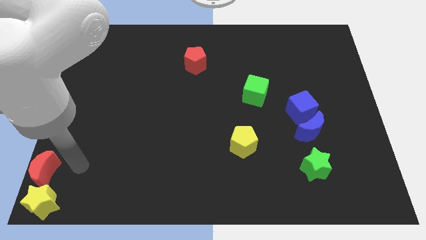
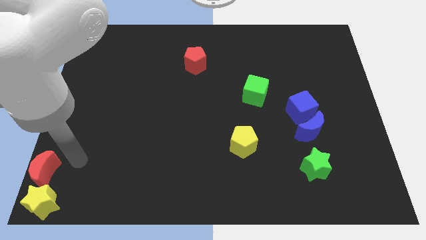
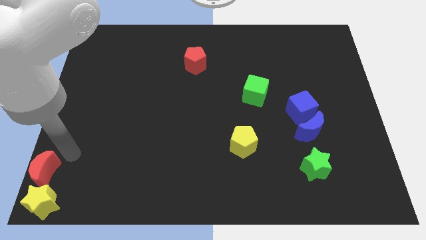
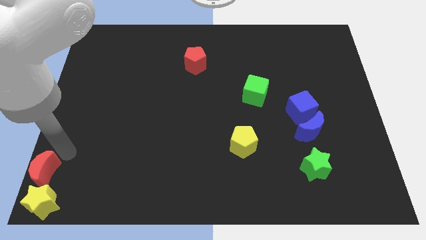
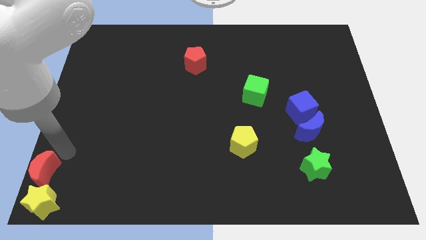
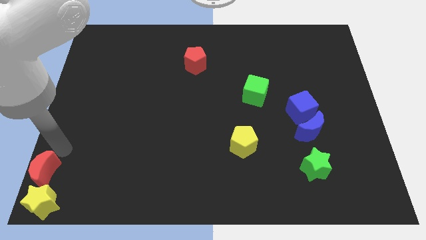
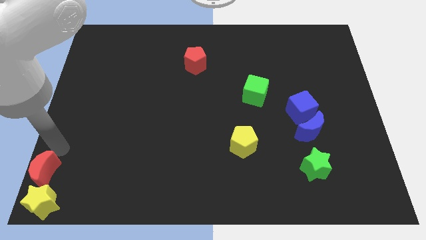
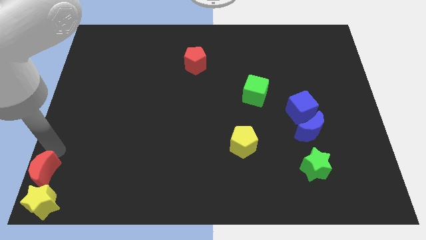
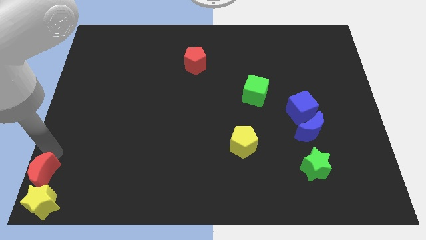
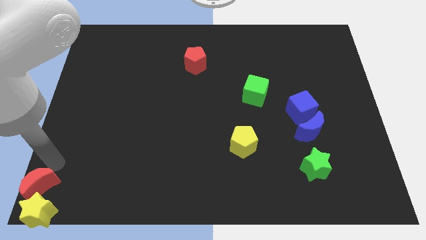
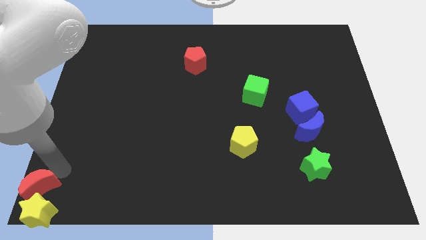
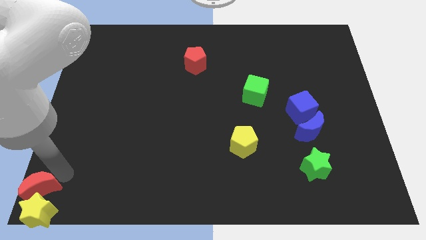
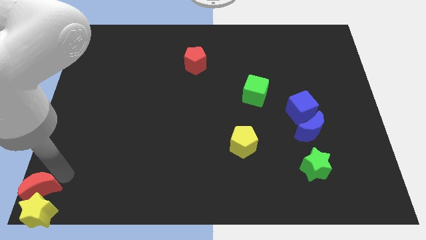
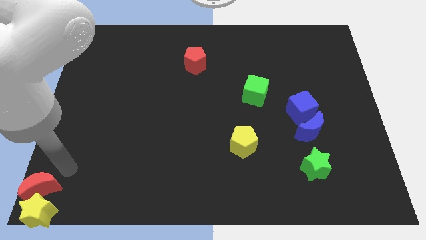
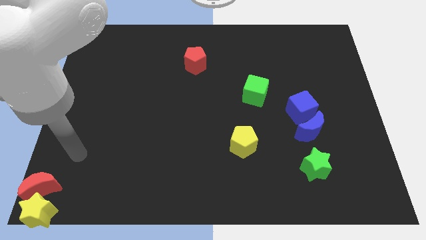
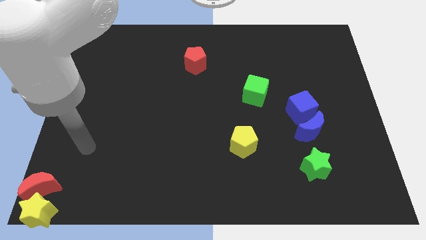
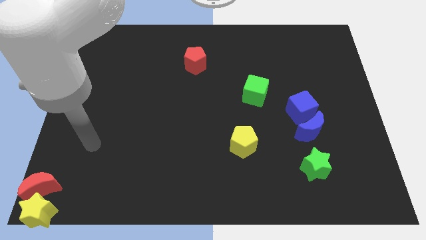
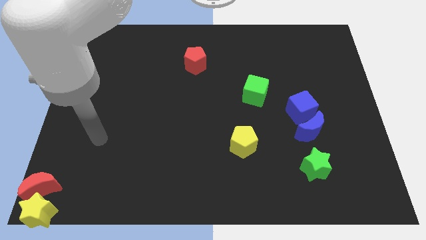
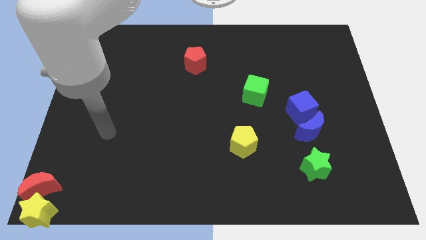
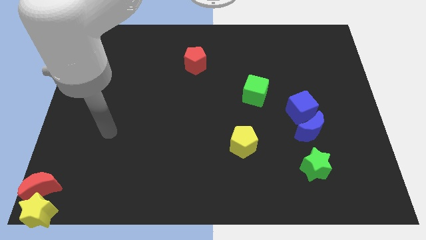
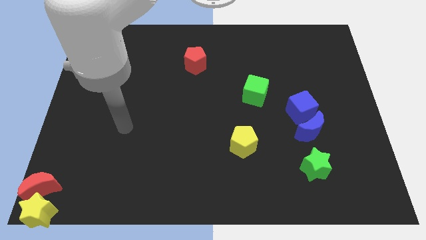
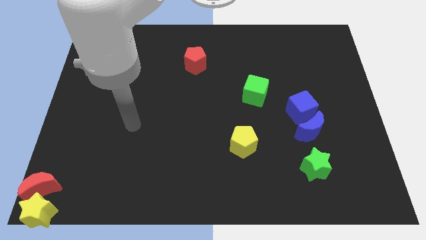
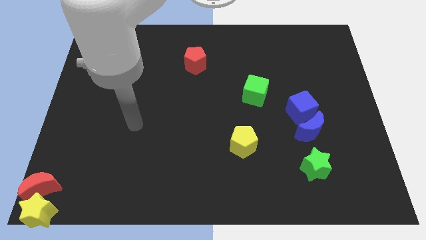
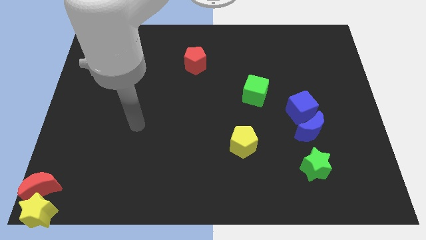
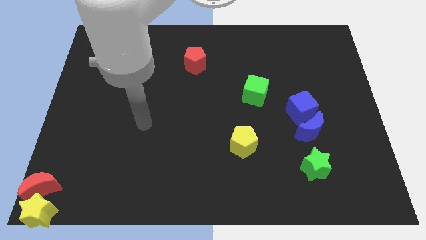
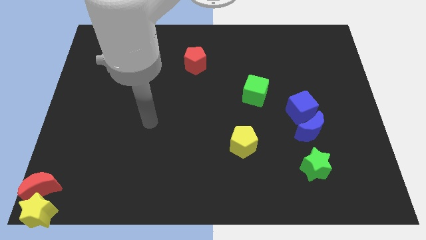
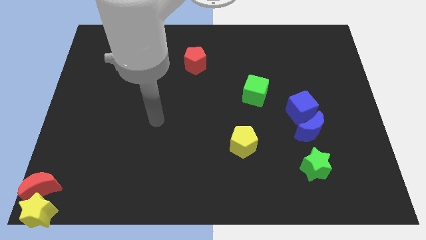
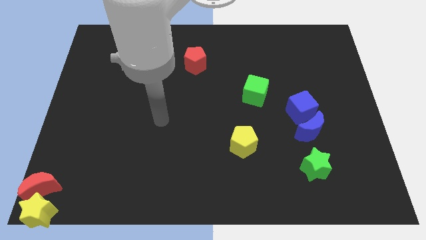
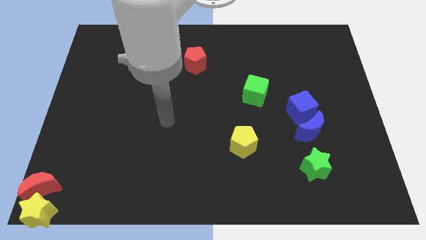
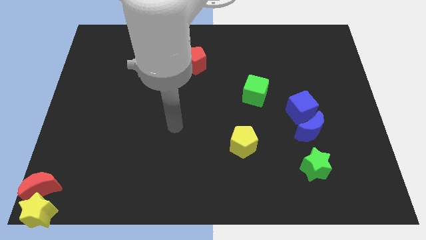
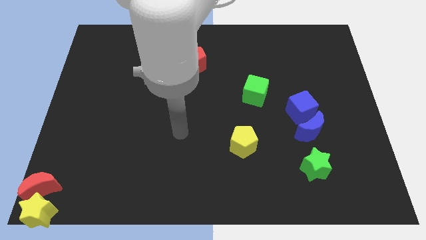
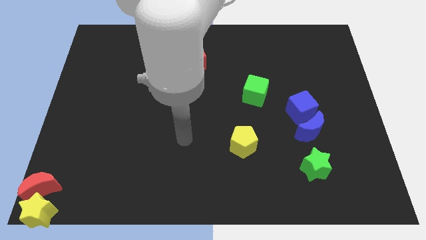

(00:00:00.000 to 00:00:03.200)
push red crescent in to yellow star

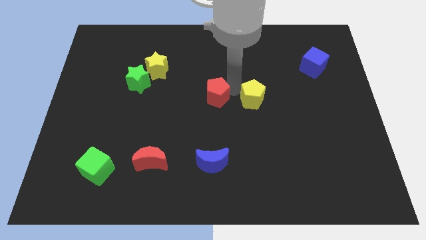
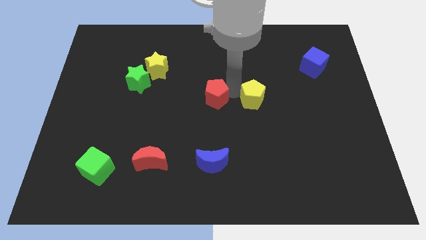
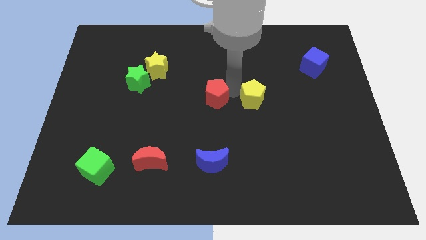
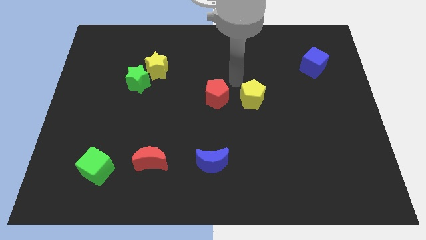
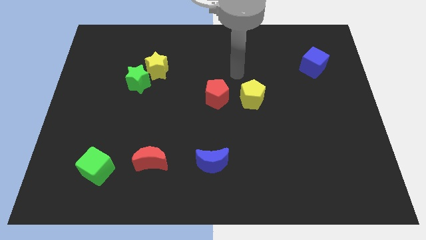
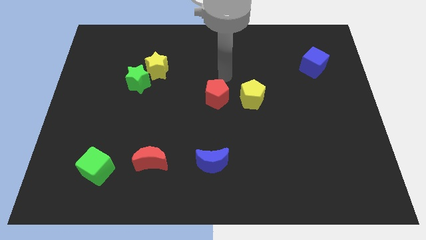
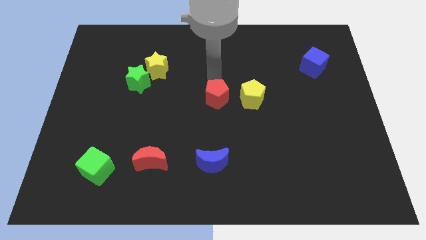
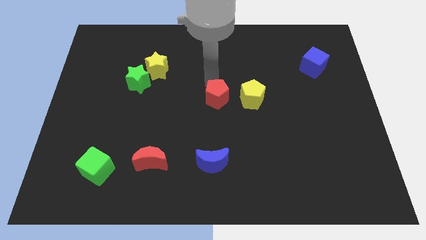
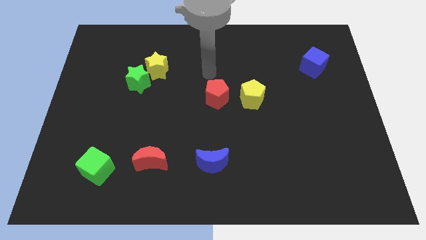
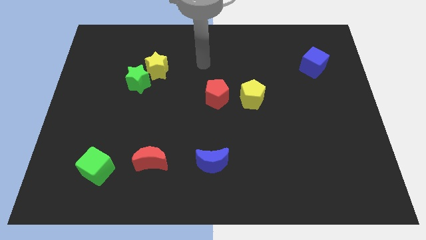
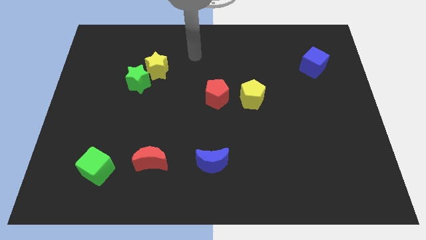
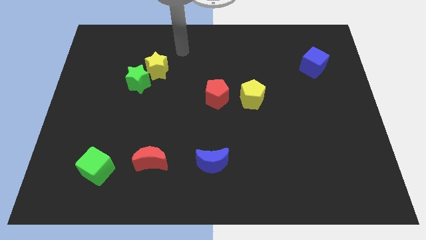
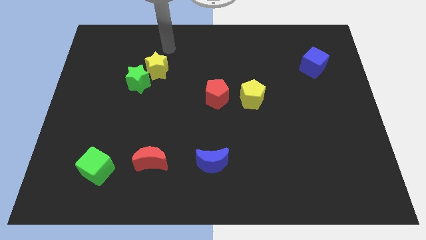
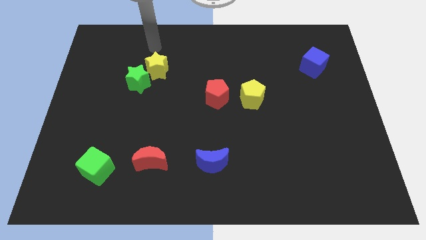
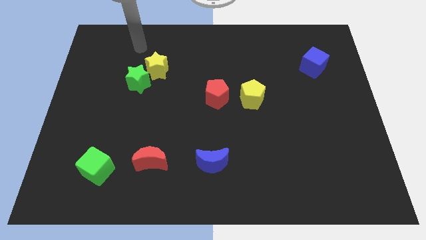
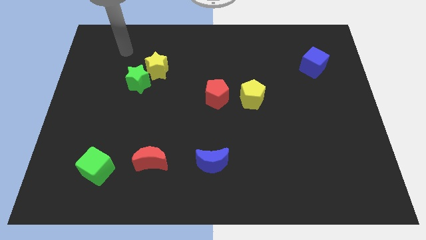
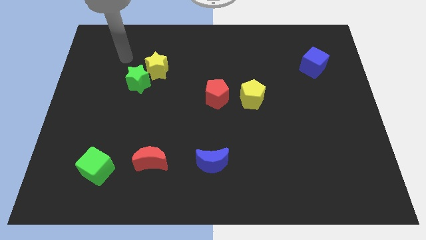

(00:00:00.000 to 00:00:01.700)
move the arm away from the red pentagon

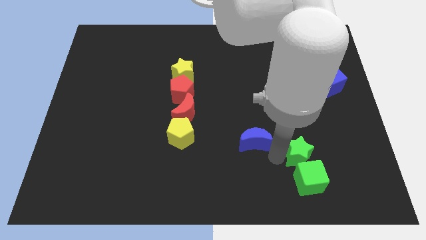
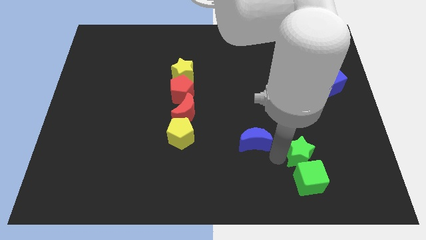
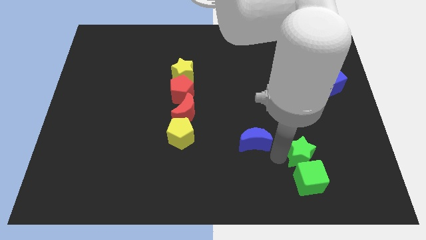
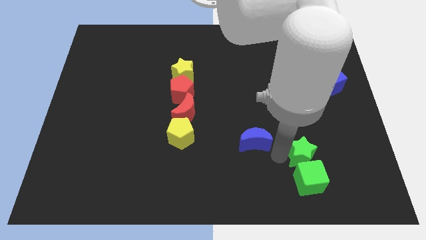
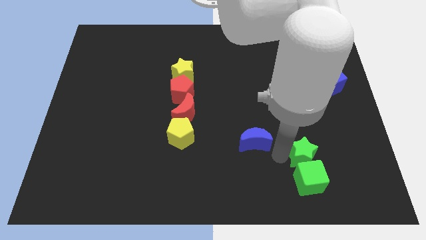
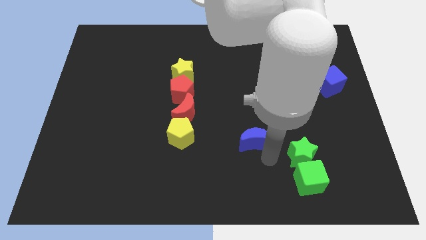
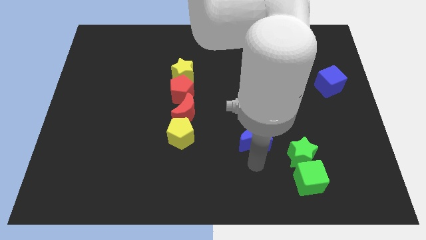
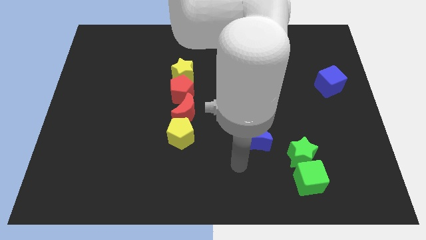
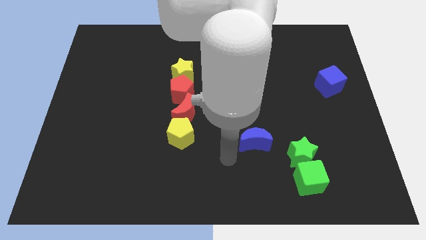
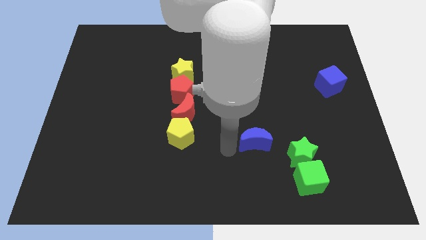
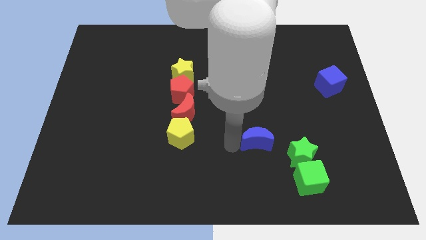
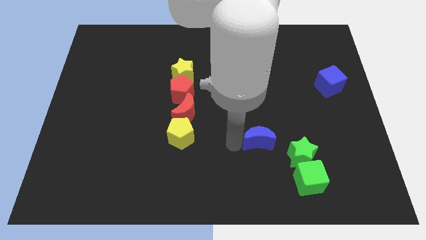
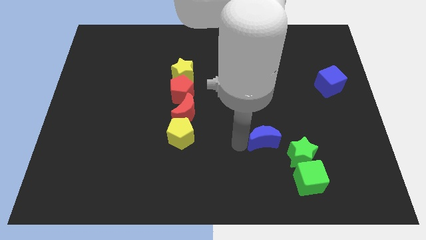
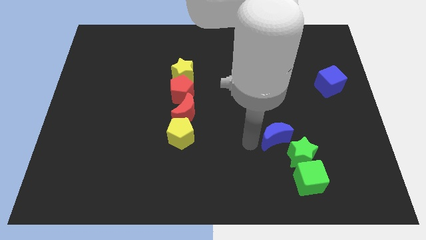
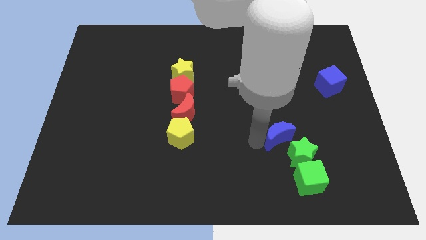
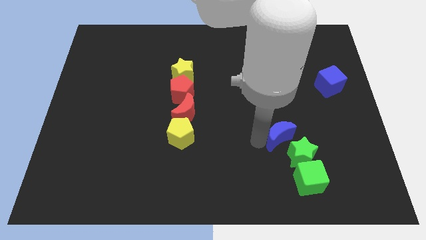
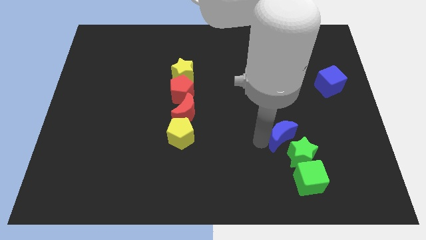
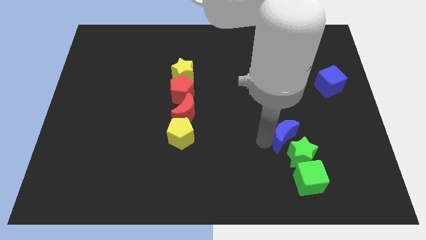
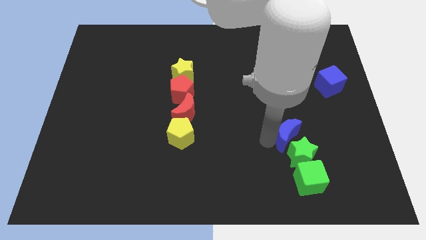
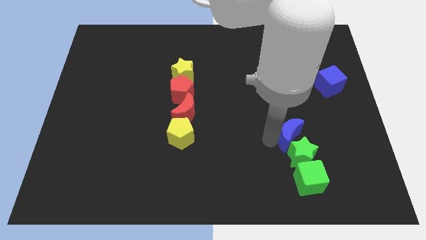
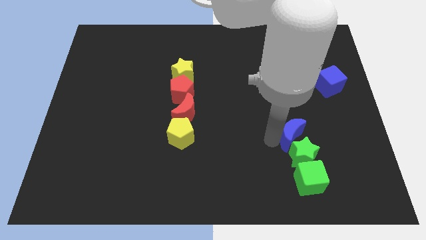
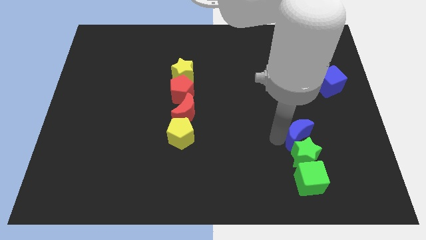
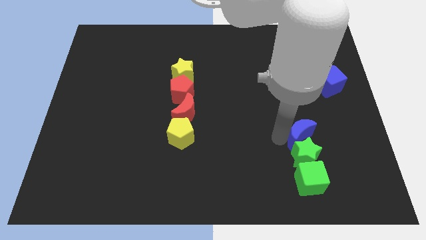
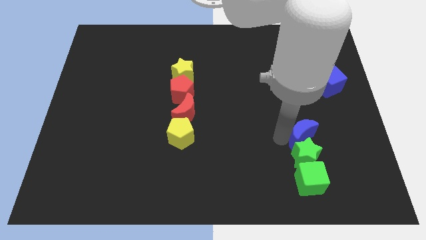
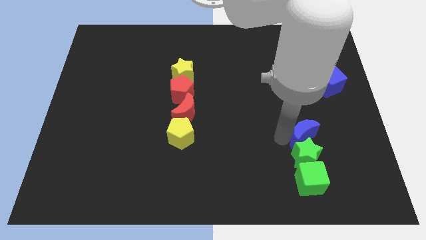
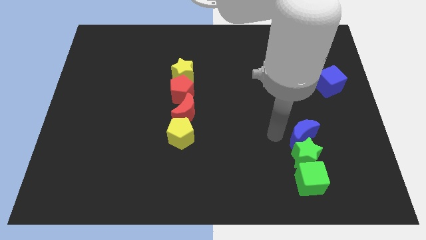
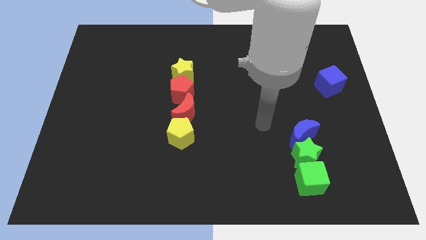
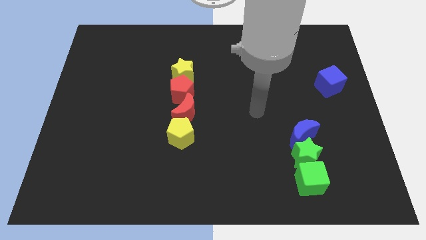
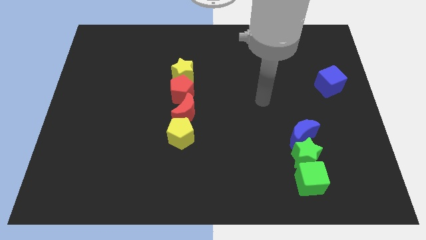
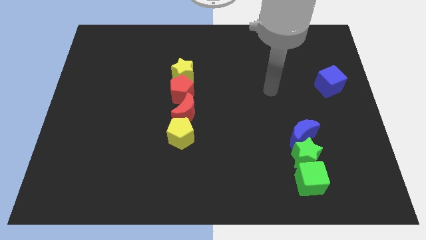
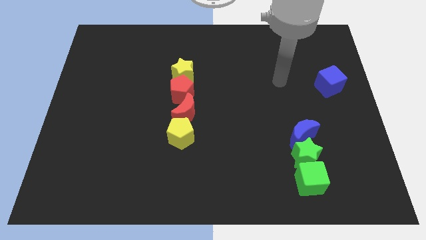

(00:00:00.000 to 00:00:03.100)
move the blue crescent above to the green star

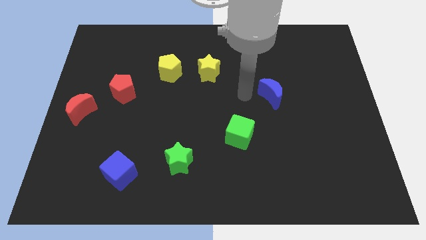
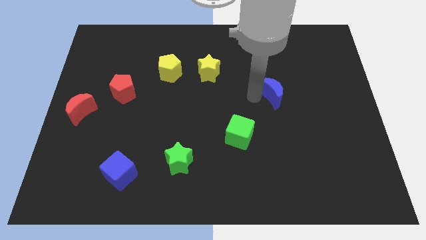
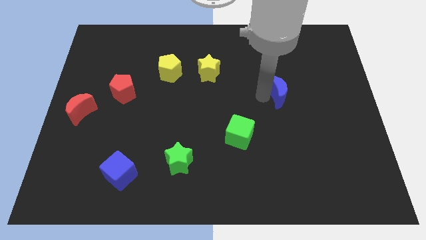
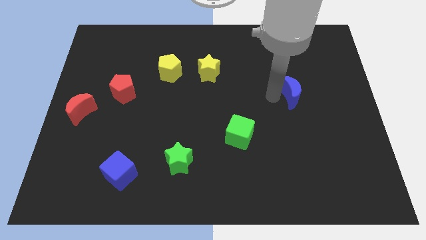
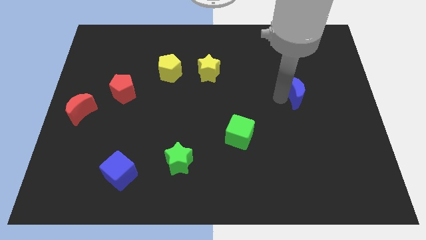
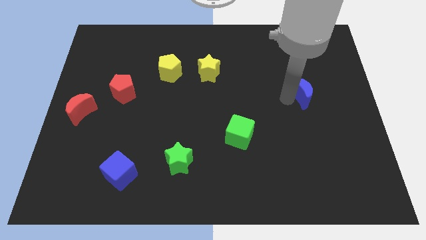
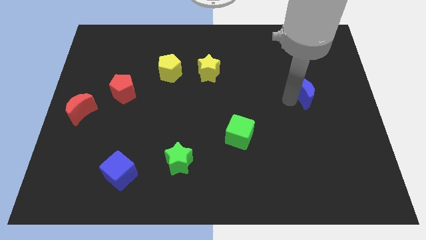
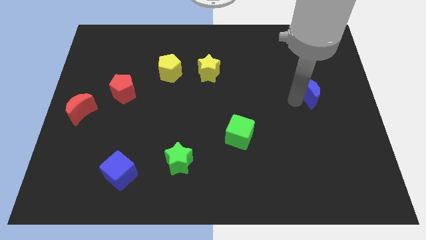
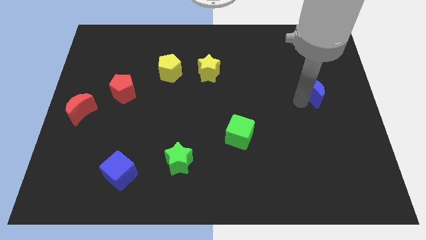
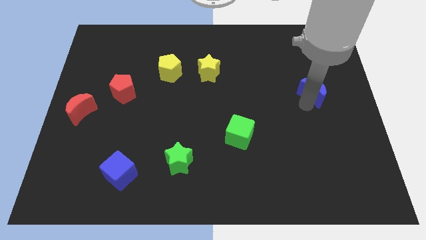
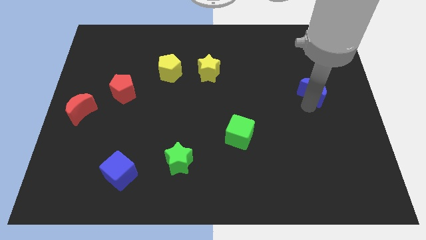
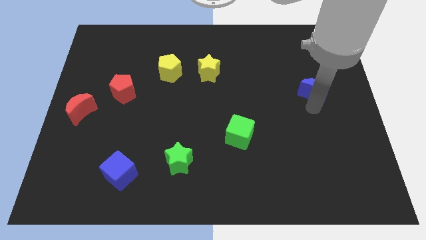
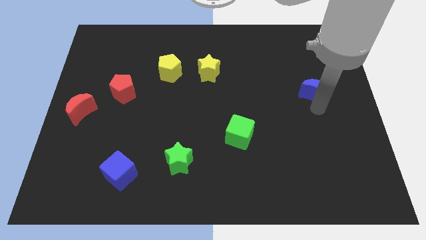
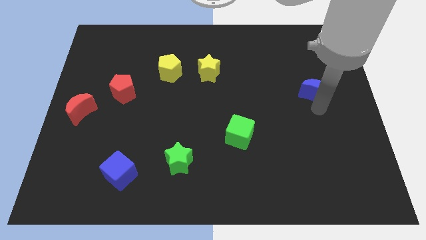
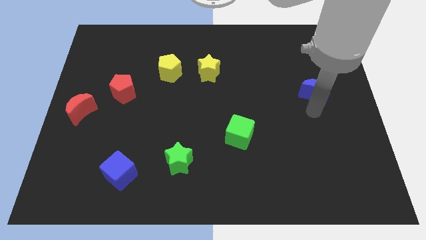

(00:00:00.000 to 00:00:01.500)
push the blue crescent to the right of the board
